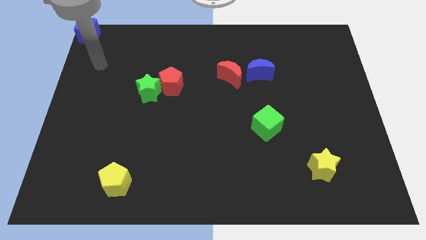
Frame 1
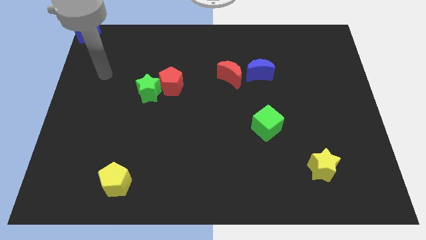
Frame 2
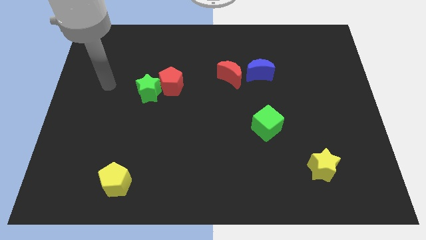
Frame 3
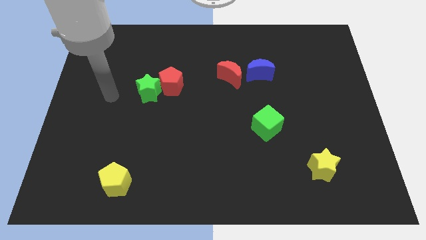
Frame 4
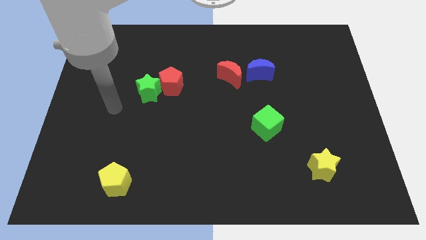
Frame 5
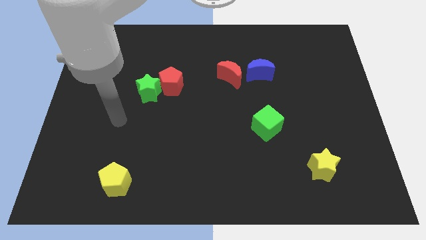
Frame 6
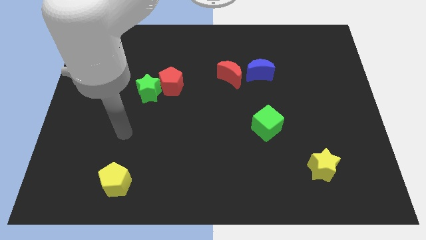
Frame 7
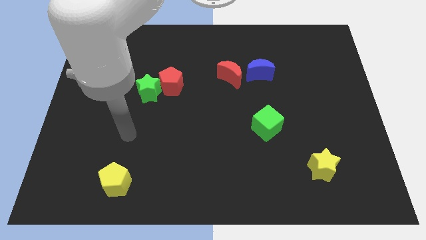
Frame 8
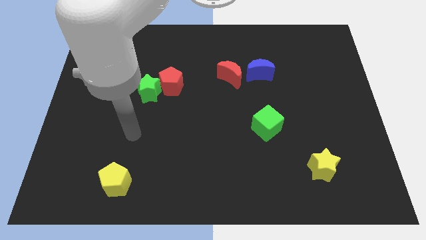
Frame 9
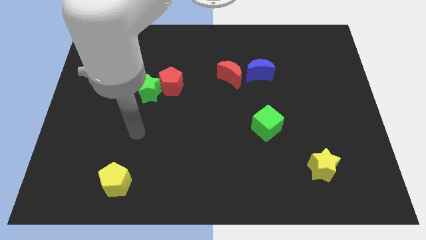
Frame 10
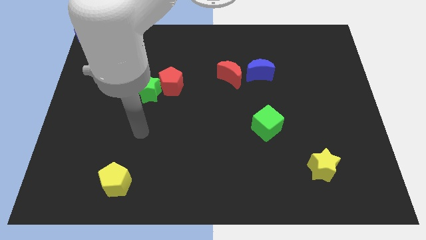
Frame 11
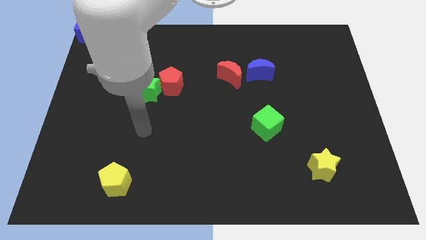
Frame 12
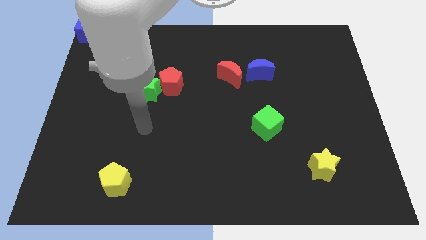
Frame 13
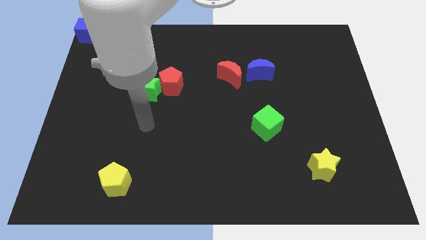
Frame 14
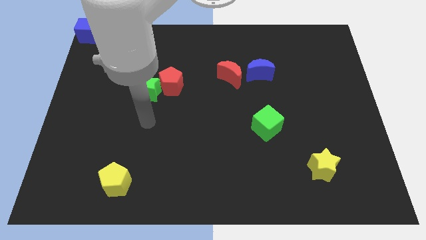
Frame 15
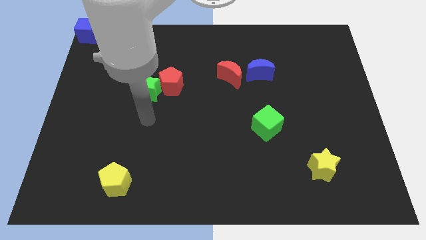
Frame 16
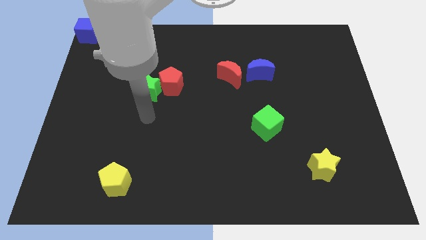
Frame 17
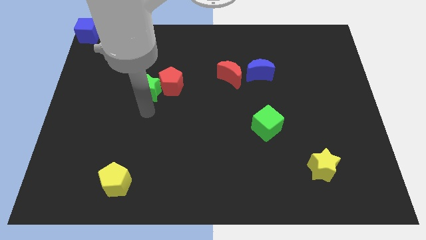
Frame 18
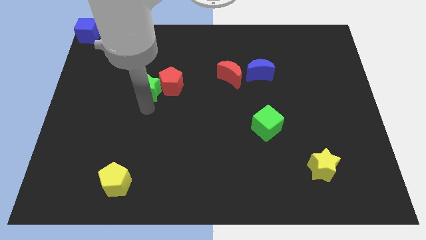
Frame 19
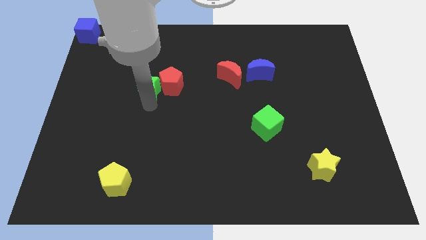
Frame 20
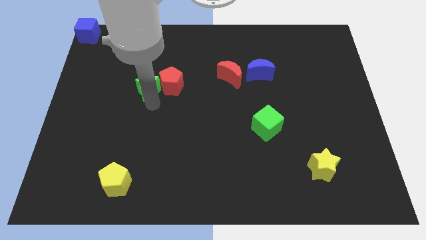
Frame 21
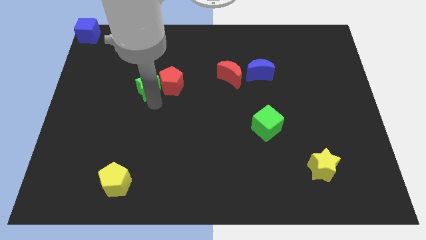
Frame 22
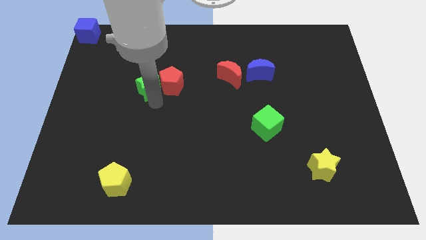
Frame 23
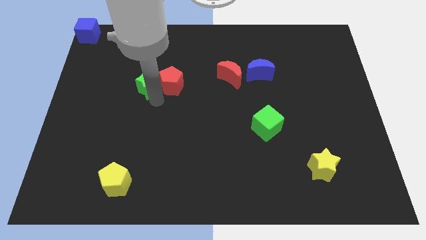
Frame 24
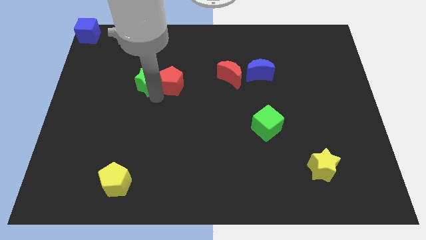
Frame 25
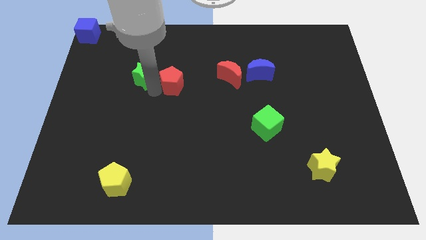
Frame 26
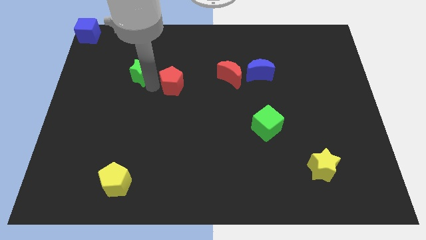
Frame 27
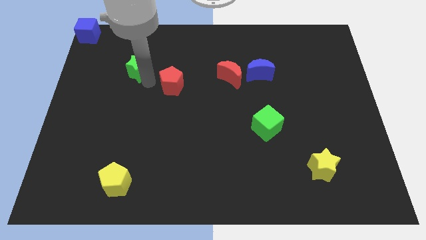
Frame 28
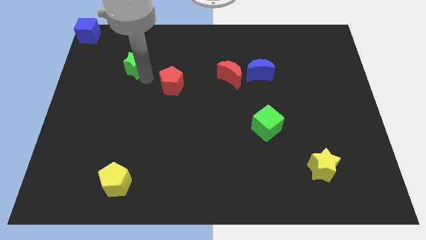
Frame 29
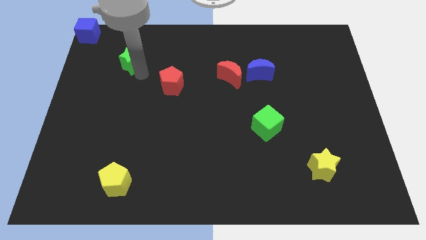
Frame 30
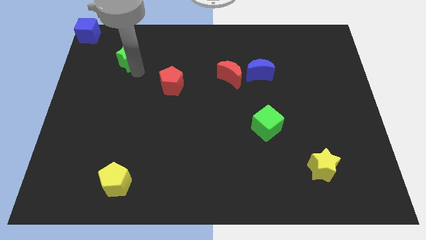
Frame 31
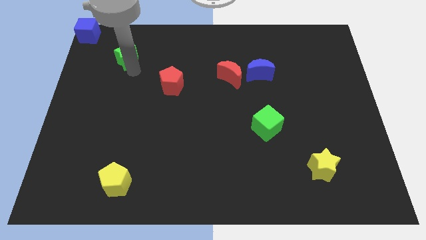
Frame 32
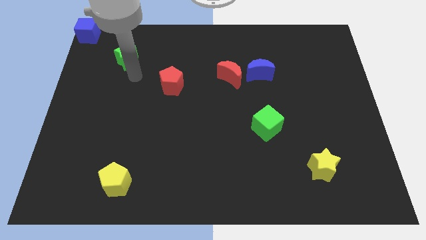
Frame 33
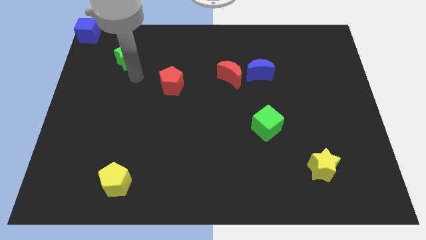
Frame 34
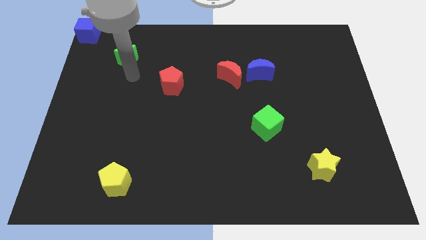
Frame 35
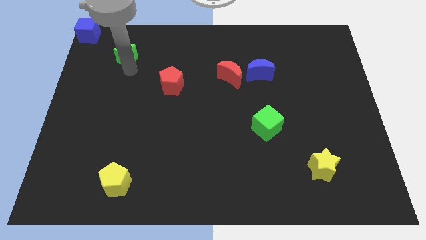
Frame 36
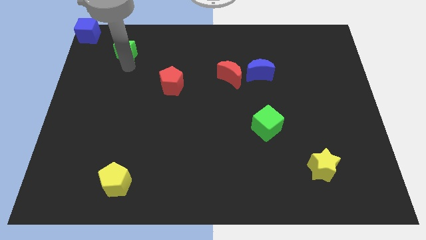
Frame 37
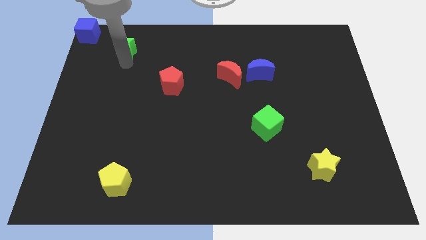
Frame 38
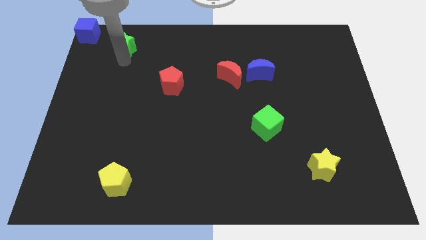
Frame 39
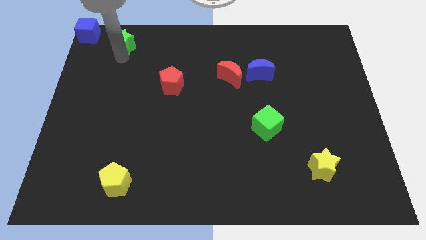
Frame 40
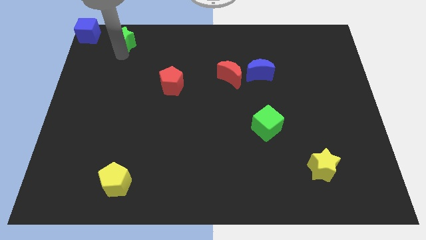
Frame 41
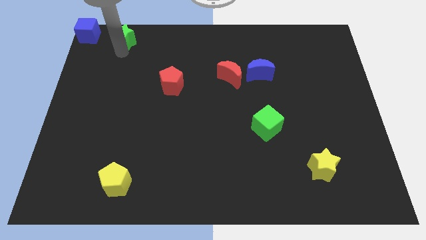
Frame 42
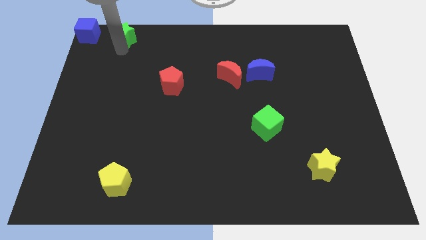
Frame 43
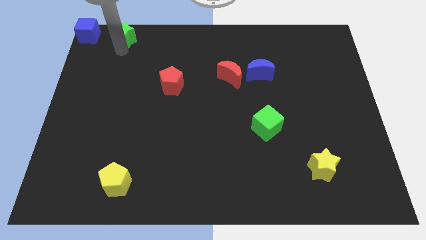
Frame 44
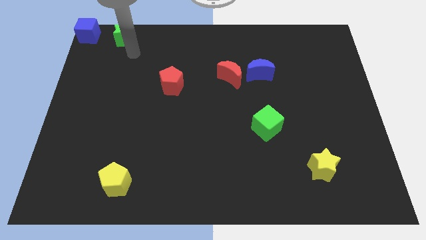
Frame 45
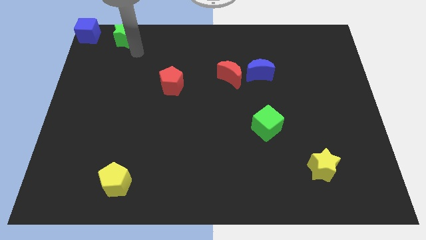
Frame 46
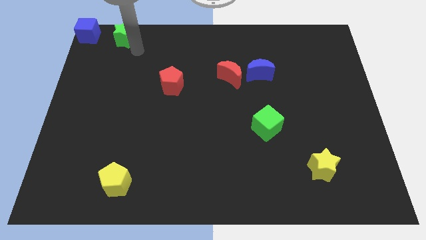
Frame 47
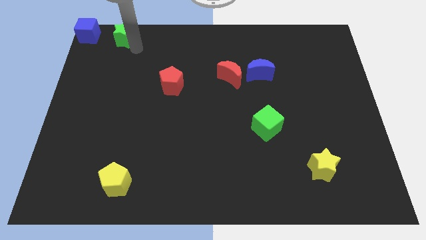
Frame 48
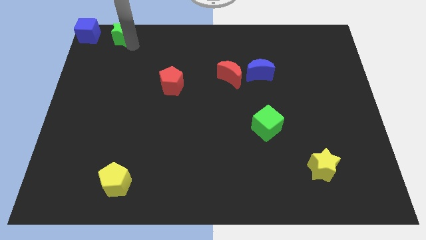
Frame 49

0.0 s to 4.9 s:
separate green star from the red pentagon

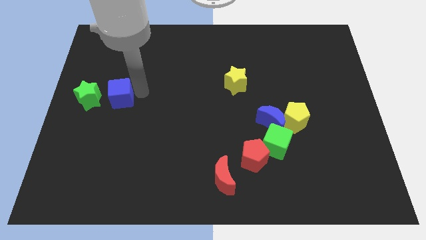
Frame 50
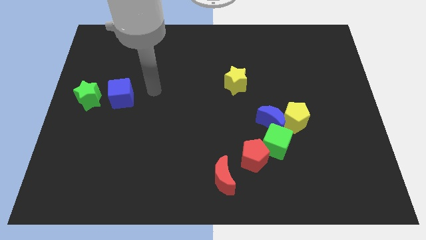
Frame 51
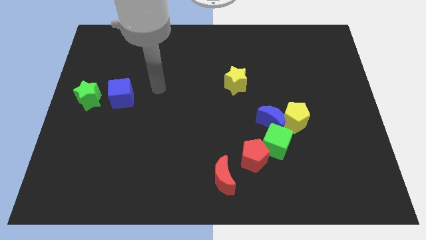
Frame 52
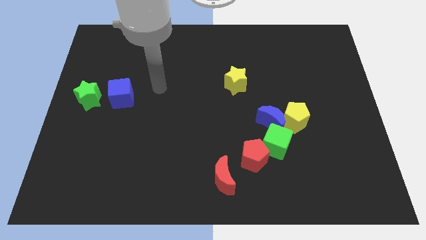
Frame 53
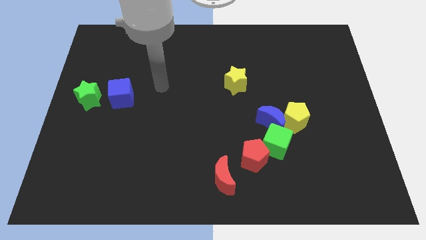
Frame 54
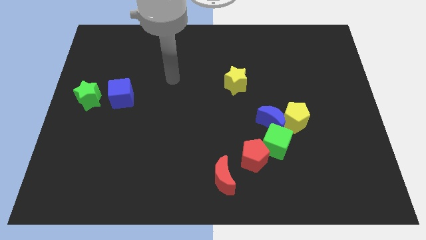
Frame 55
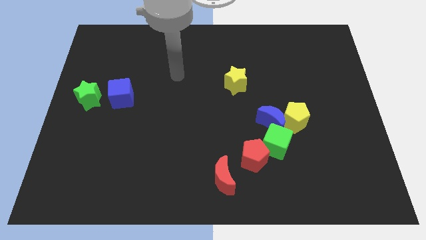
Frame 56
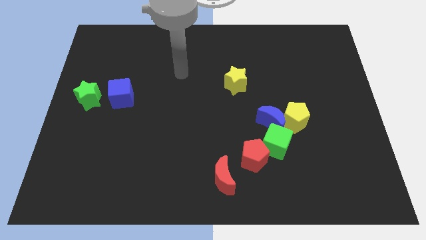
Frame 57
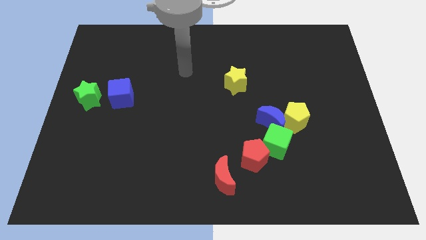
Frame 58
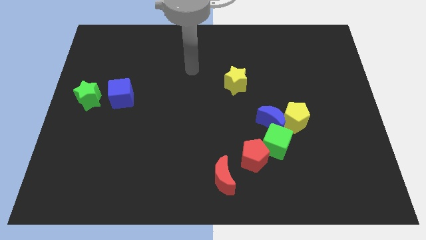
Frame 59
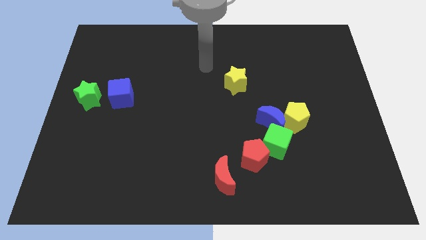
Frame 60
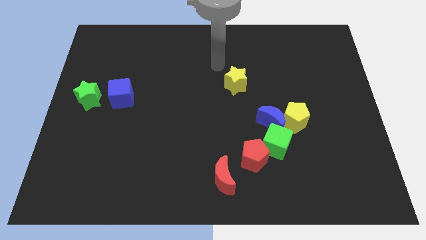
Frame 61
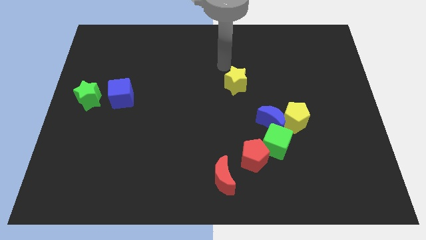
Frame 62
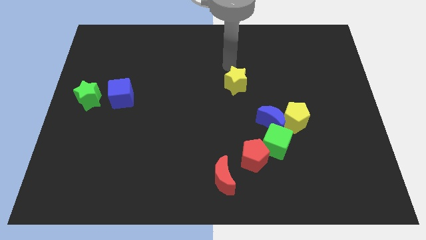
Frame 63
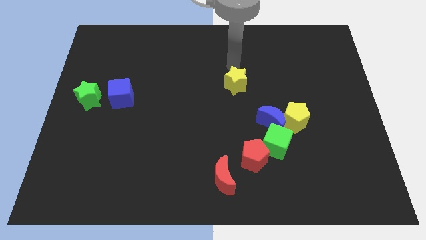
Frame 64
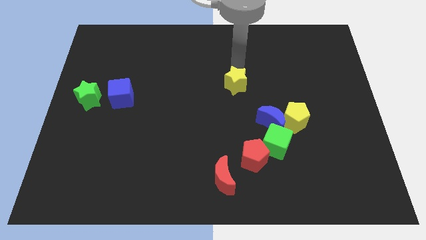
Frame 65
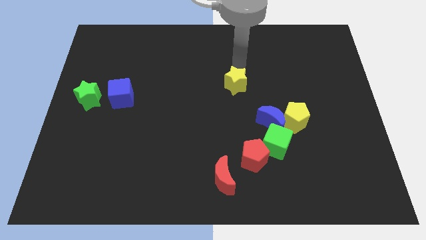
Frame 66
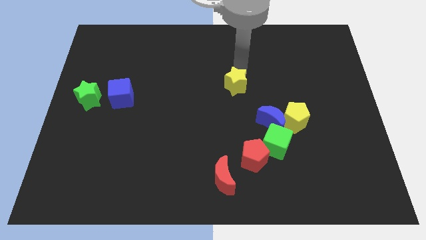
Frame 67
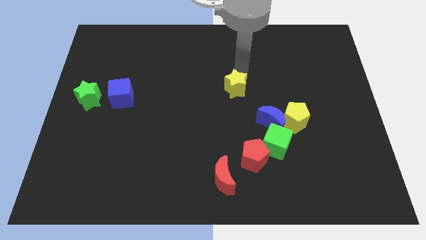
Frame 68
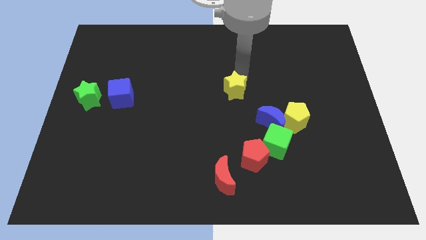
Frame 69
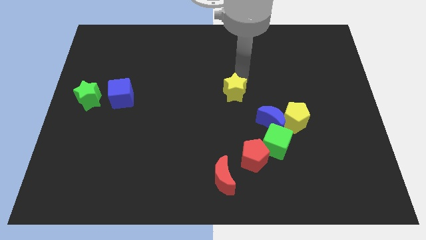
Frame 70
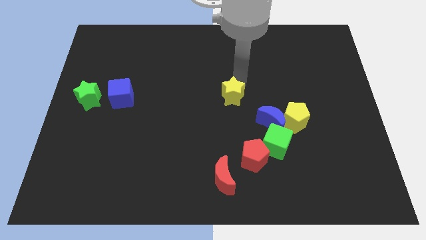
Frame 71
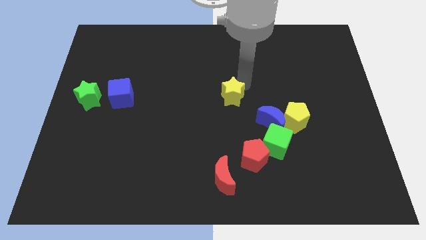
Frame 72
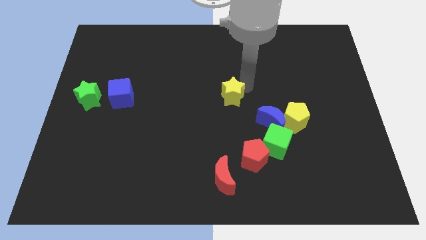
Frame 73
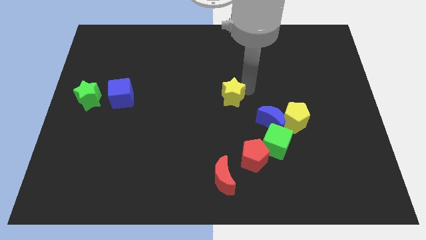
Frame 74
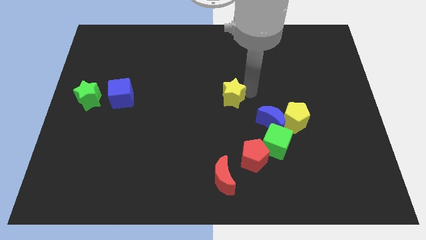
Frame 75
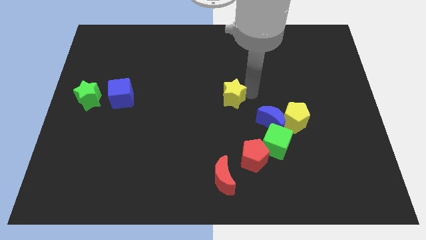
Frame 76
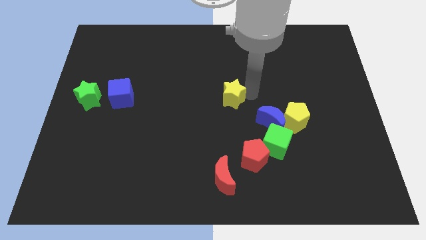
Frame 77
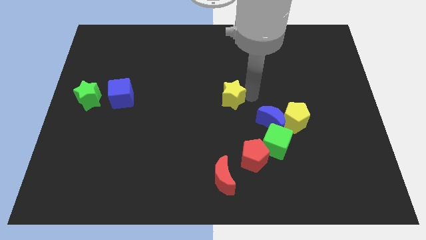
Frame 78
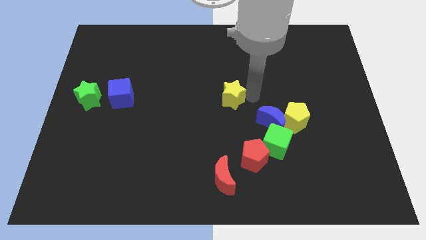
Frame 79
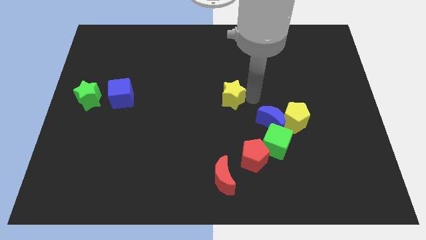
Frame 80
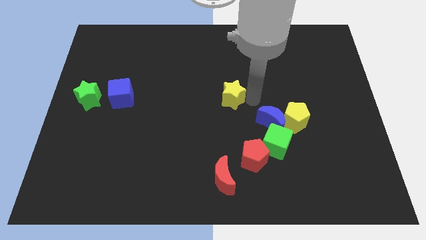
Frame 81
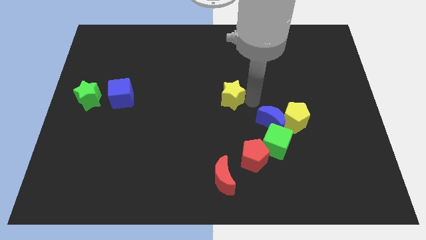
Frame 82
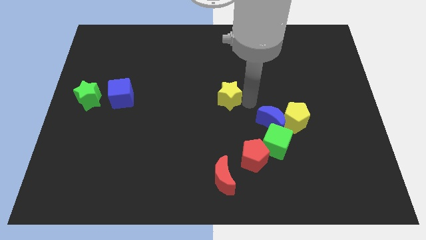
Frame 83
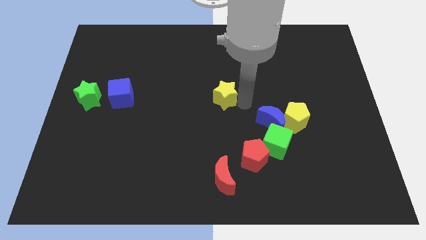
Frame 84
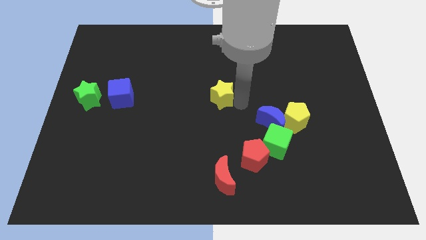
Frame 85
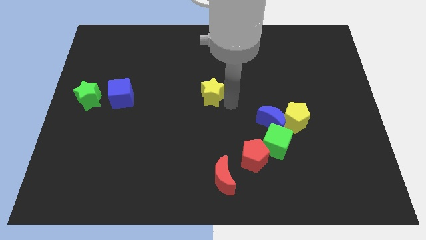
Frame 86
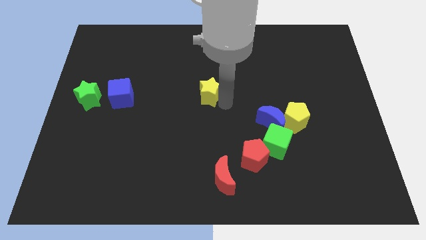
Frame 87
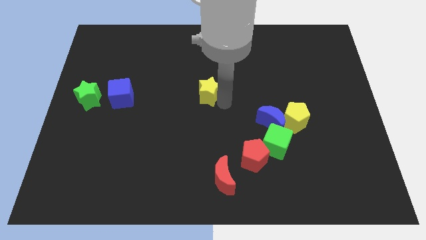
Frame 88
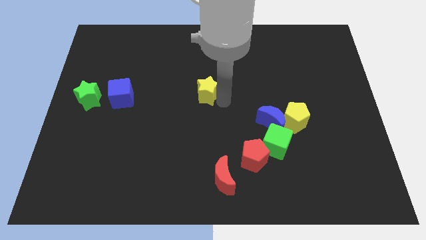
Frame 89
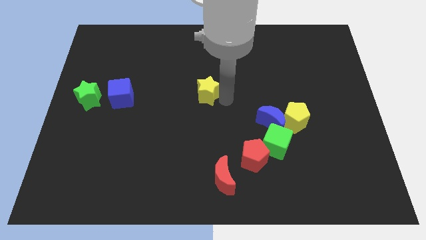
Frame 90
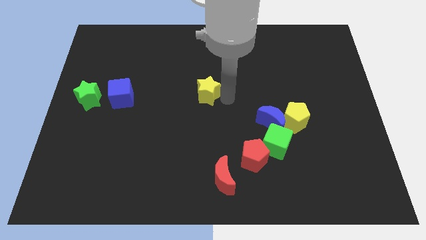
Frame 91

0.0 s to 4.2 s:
place the yellow star at the center of the board
